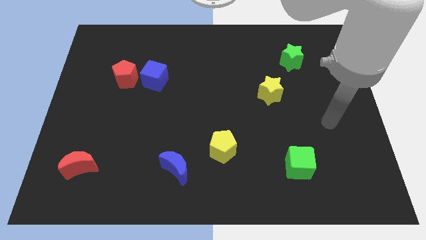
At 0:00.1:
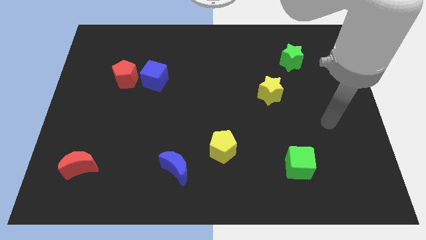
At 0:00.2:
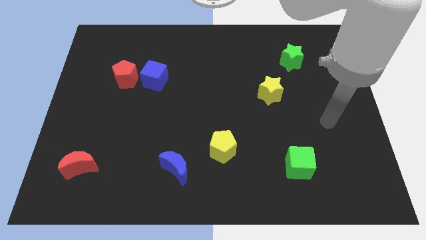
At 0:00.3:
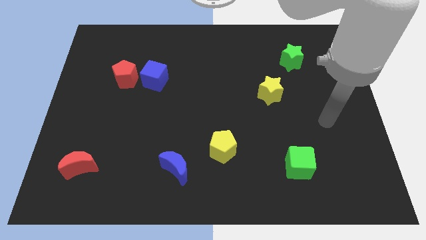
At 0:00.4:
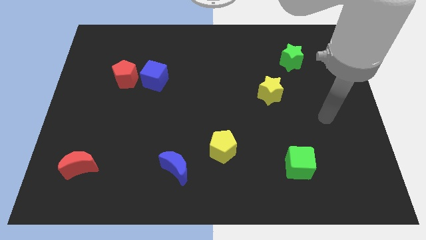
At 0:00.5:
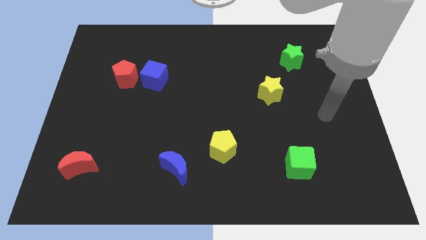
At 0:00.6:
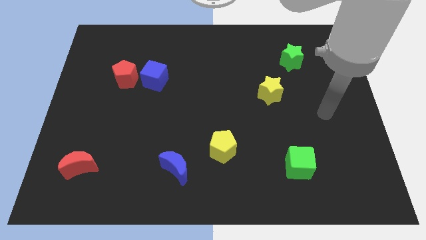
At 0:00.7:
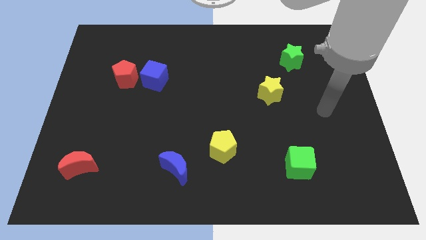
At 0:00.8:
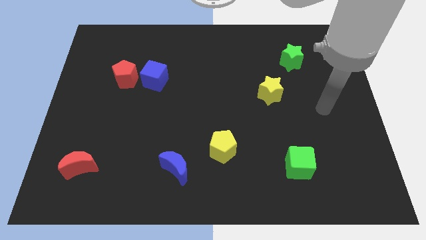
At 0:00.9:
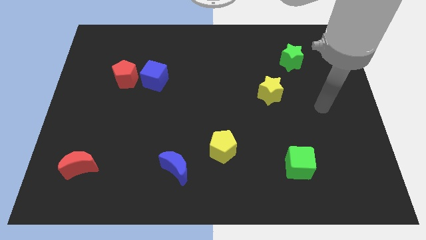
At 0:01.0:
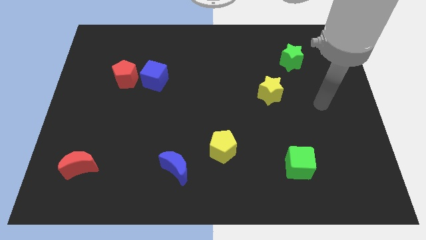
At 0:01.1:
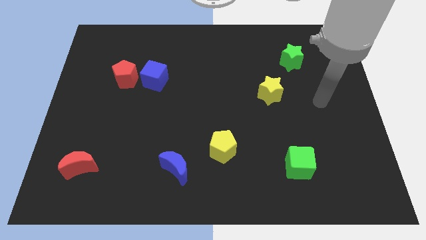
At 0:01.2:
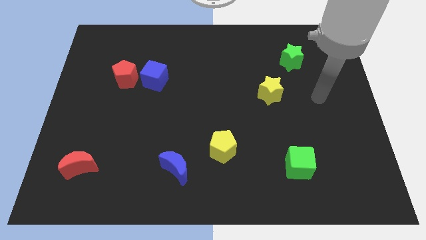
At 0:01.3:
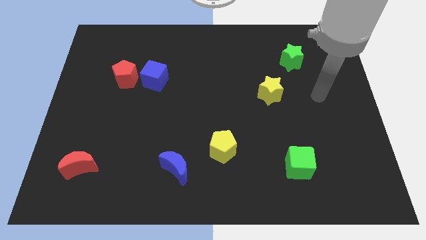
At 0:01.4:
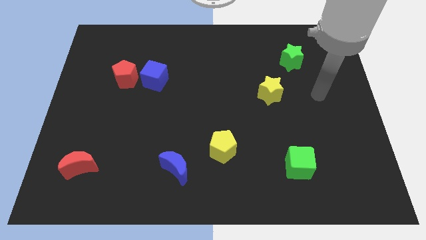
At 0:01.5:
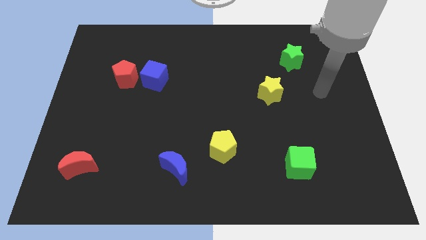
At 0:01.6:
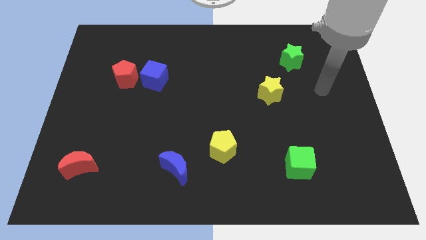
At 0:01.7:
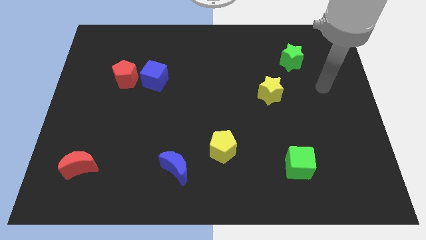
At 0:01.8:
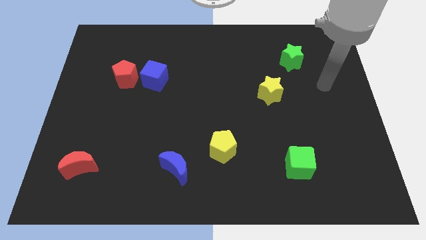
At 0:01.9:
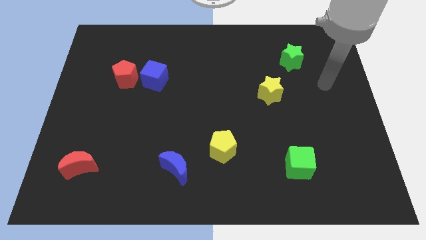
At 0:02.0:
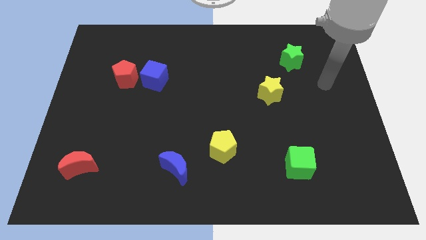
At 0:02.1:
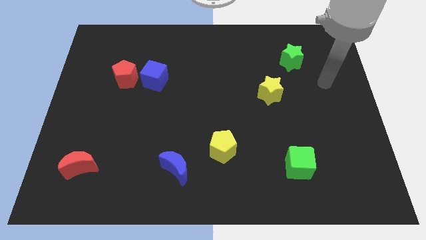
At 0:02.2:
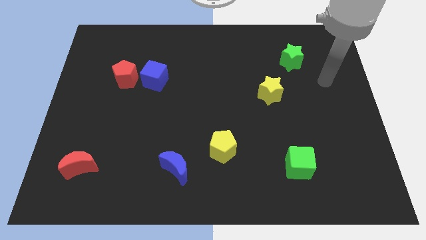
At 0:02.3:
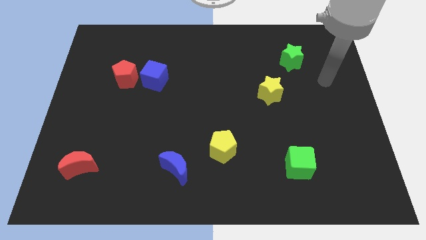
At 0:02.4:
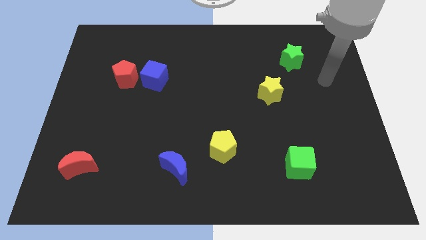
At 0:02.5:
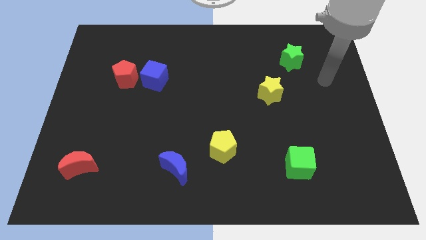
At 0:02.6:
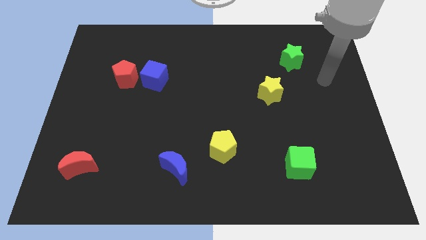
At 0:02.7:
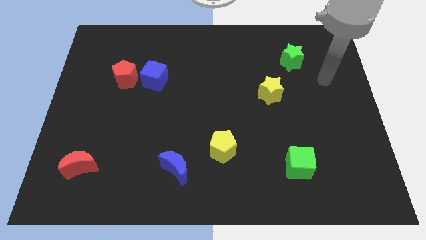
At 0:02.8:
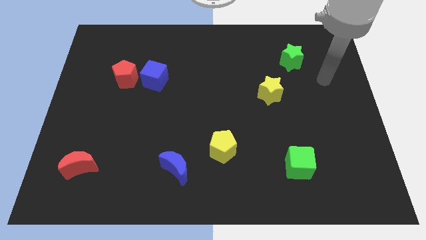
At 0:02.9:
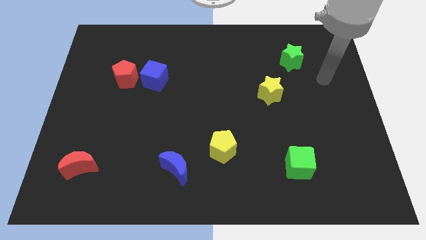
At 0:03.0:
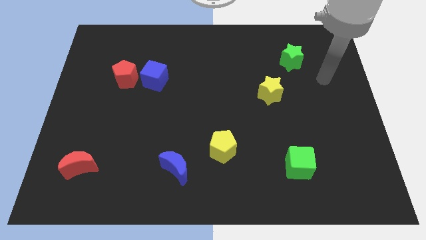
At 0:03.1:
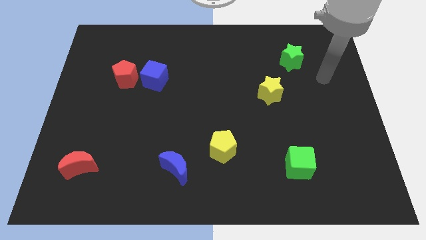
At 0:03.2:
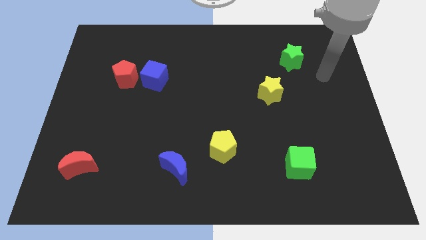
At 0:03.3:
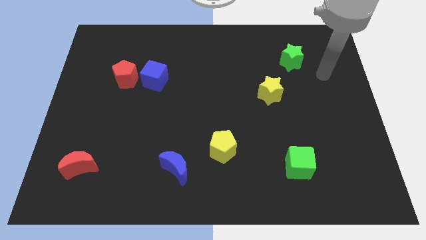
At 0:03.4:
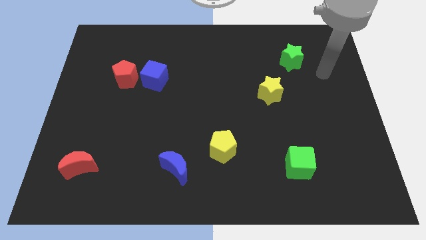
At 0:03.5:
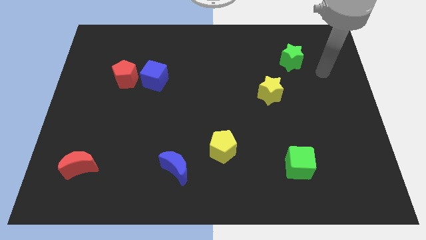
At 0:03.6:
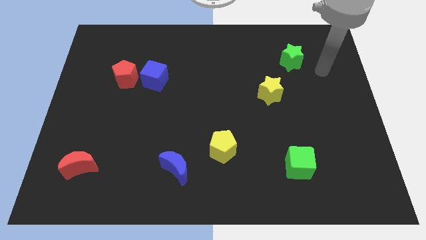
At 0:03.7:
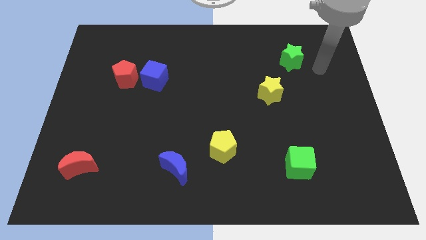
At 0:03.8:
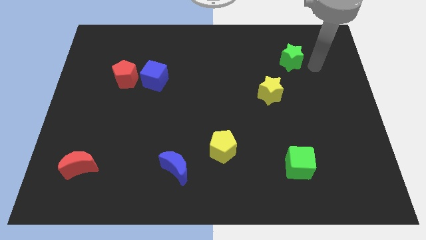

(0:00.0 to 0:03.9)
place your arm at the right side of the green star

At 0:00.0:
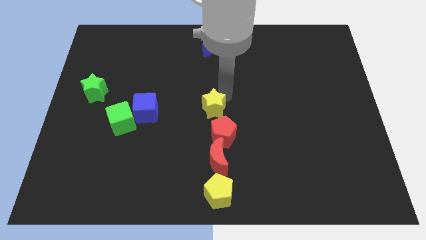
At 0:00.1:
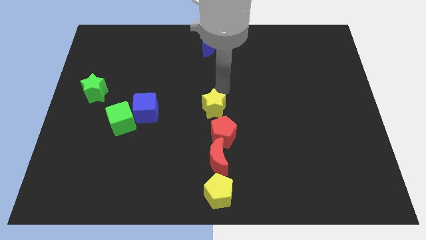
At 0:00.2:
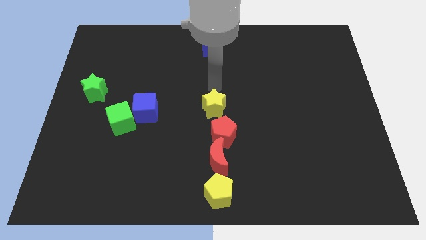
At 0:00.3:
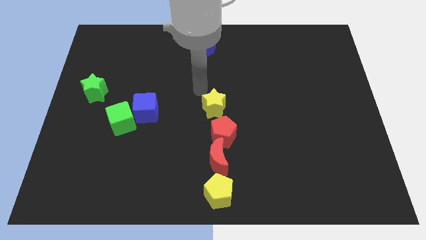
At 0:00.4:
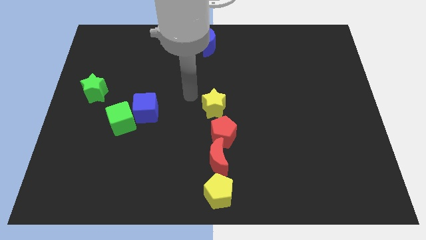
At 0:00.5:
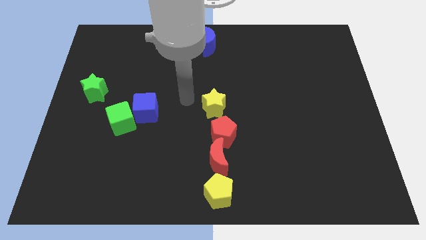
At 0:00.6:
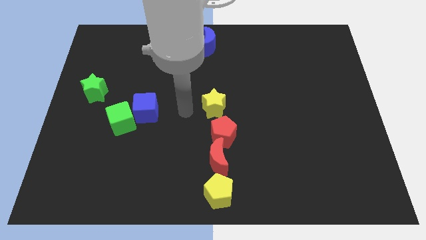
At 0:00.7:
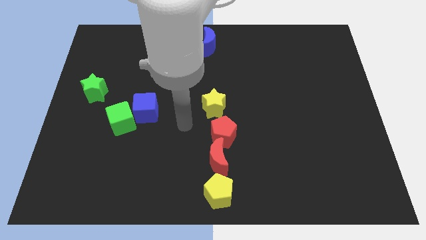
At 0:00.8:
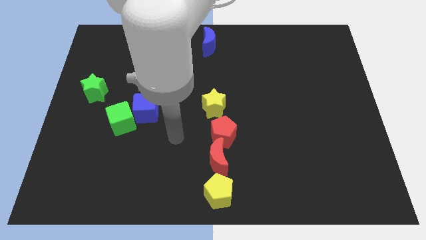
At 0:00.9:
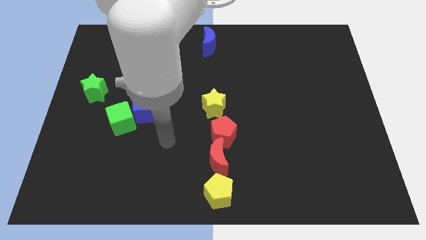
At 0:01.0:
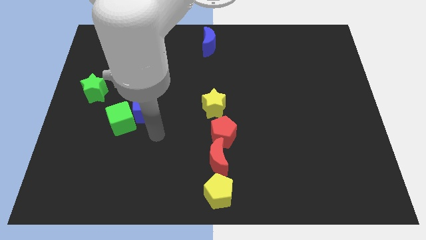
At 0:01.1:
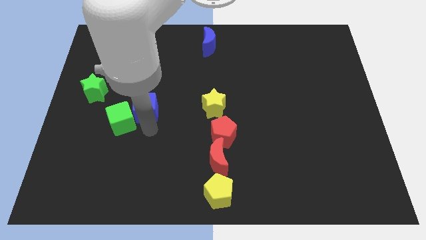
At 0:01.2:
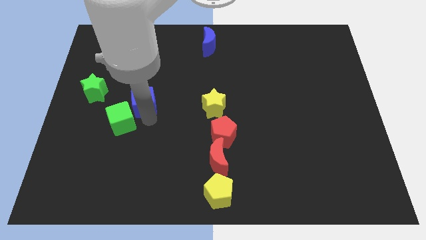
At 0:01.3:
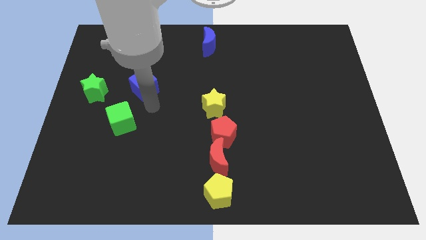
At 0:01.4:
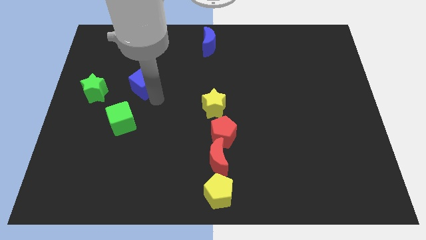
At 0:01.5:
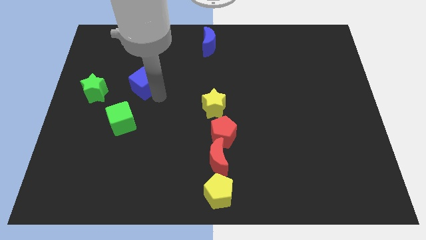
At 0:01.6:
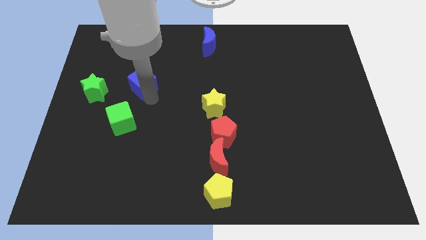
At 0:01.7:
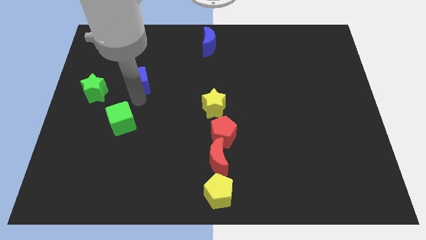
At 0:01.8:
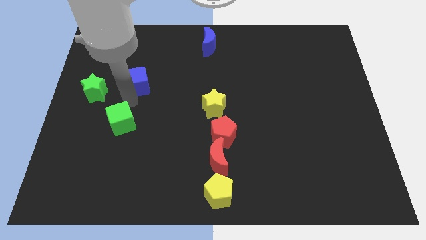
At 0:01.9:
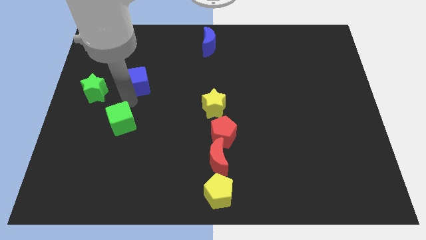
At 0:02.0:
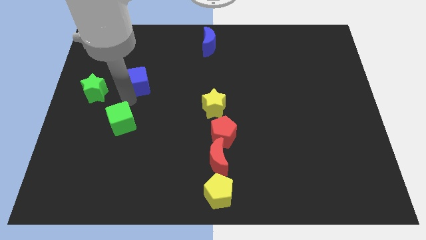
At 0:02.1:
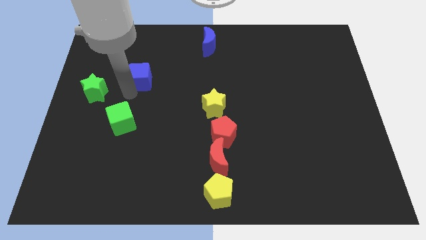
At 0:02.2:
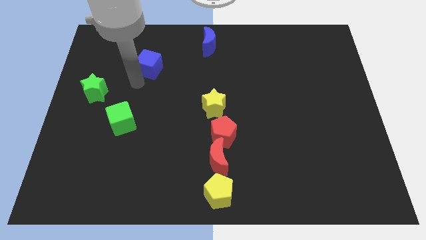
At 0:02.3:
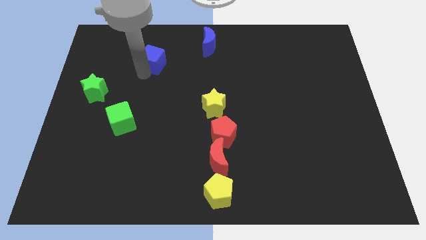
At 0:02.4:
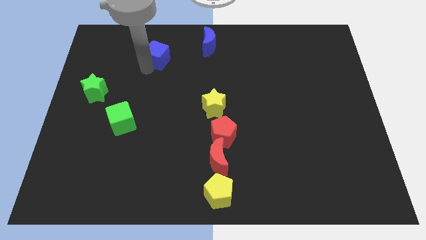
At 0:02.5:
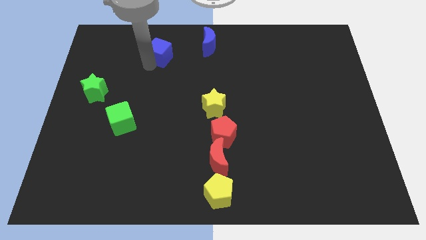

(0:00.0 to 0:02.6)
place blue cube to the top side of the blue moon

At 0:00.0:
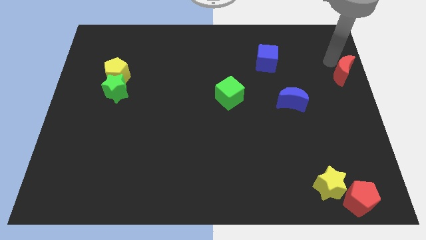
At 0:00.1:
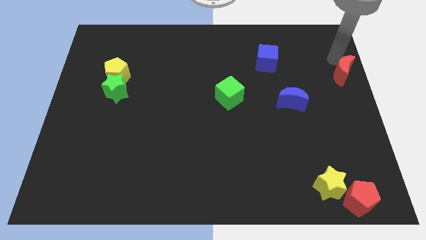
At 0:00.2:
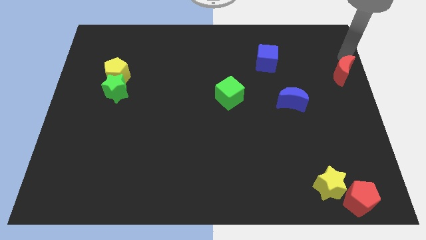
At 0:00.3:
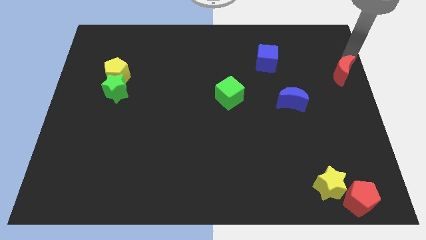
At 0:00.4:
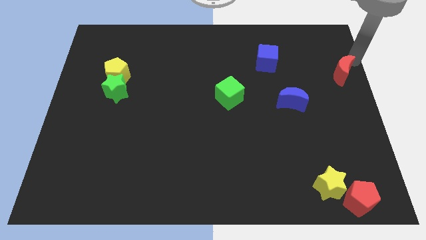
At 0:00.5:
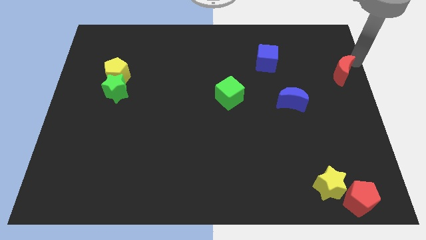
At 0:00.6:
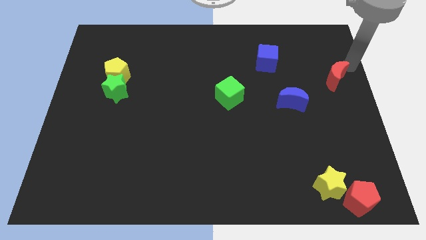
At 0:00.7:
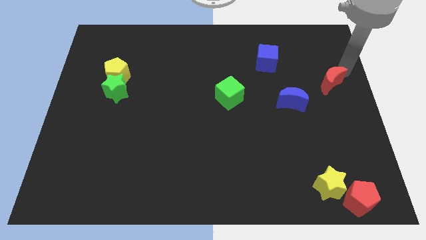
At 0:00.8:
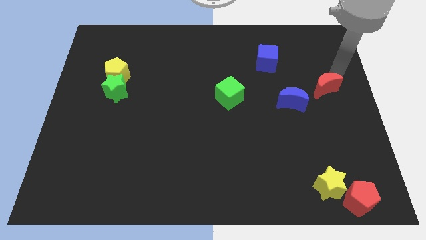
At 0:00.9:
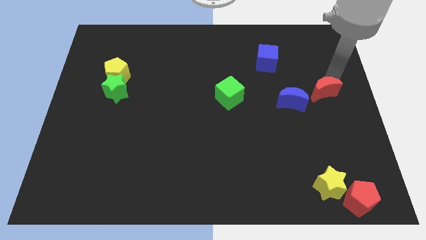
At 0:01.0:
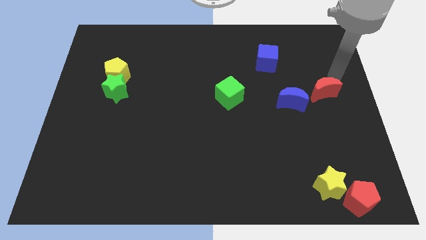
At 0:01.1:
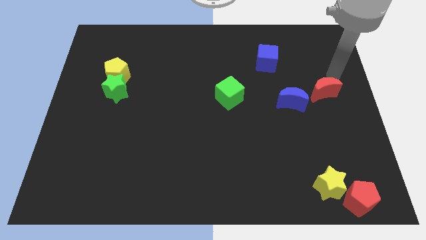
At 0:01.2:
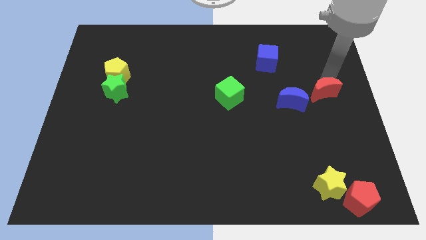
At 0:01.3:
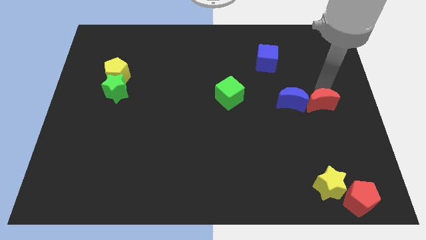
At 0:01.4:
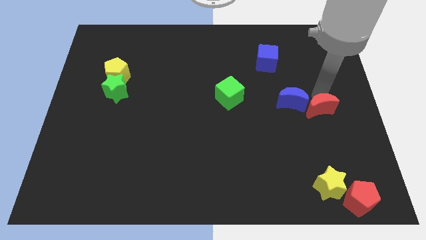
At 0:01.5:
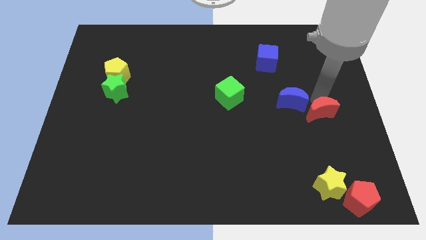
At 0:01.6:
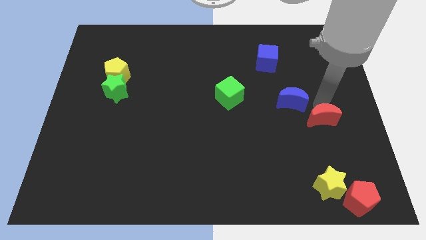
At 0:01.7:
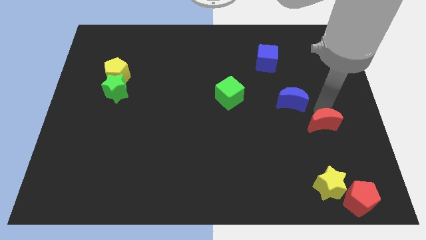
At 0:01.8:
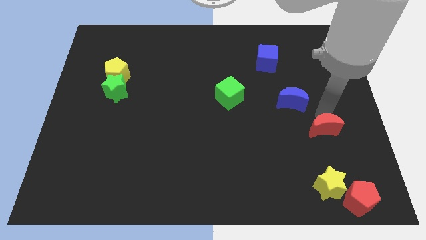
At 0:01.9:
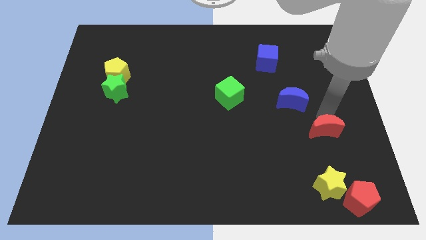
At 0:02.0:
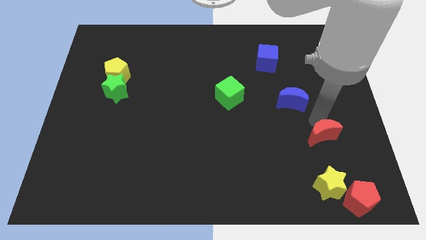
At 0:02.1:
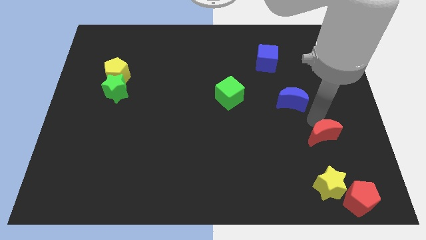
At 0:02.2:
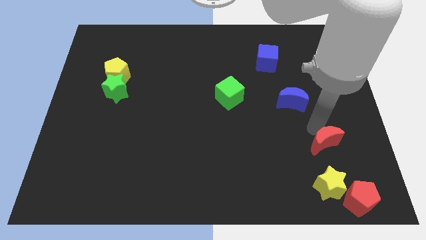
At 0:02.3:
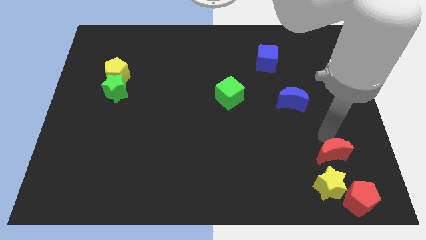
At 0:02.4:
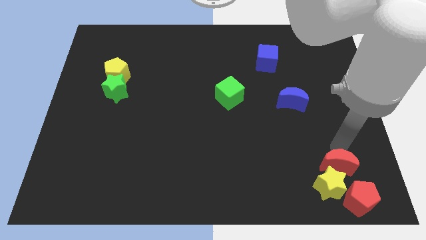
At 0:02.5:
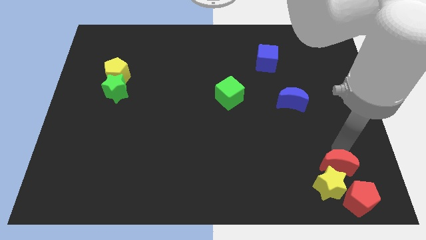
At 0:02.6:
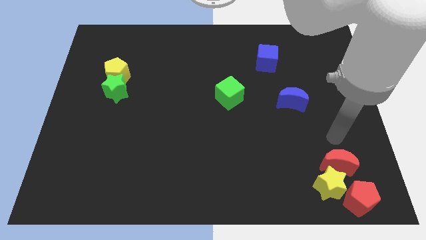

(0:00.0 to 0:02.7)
move the red moon top of the yellow star
